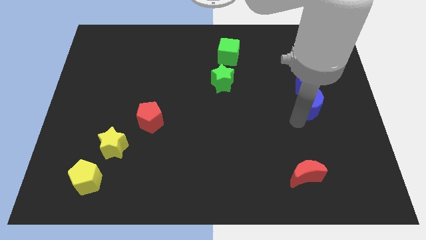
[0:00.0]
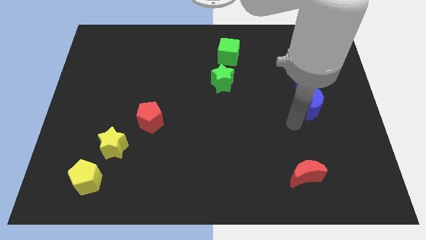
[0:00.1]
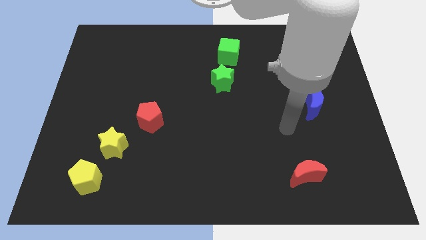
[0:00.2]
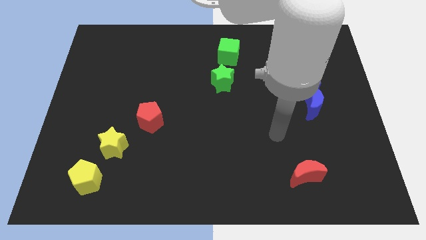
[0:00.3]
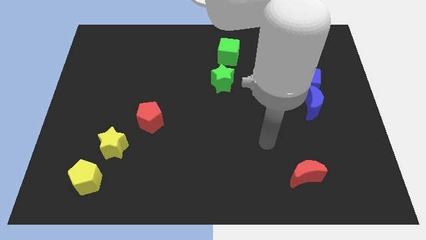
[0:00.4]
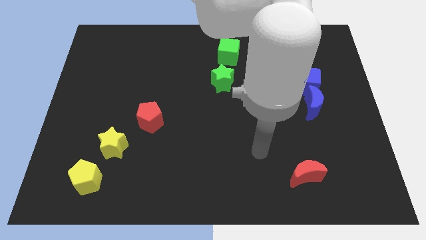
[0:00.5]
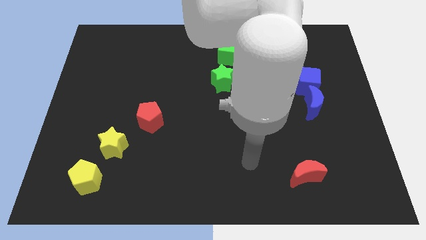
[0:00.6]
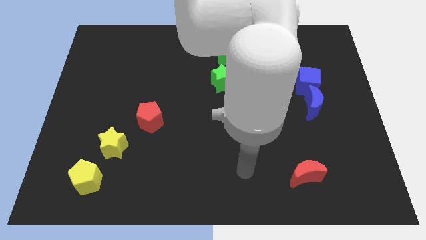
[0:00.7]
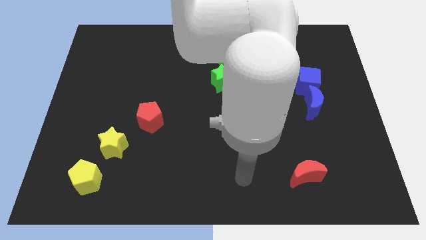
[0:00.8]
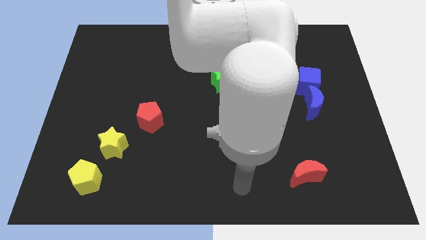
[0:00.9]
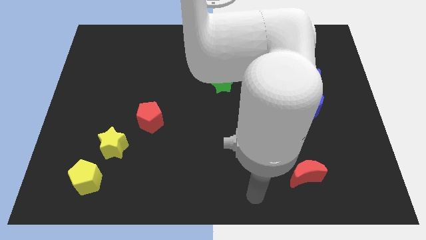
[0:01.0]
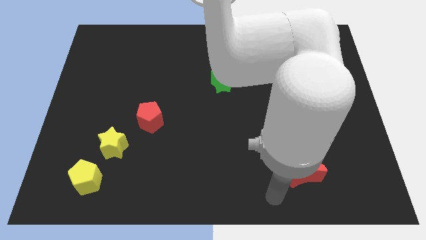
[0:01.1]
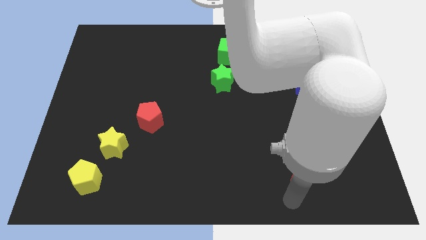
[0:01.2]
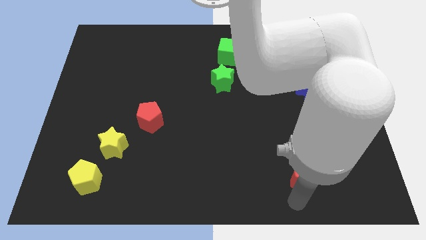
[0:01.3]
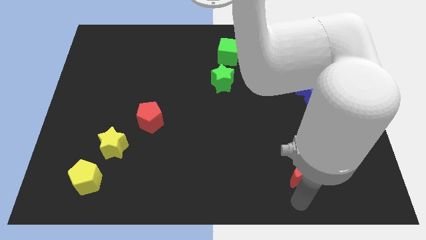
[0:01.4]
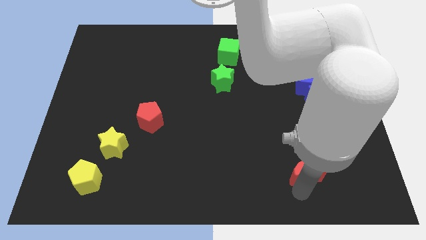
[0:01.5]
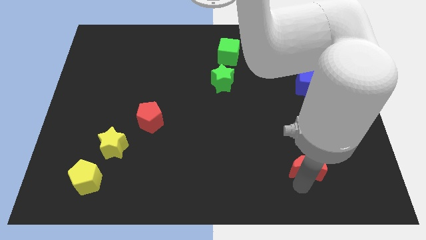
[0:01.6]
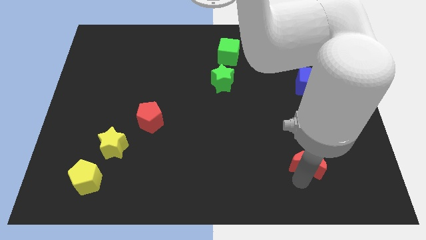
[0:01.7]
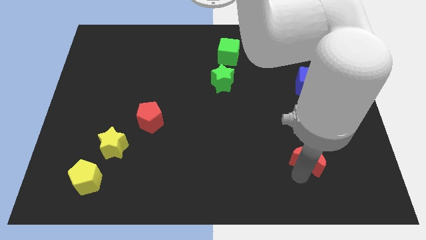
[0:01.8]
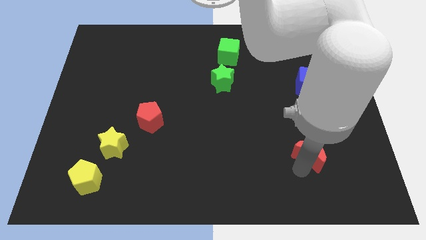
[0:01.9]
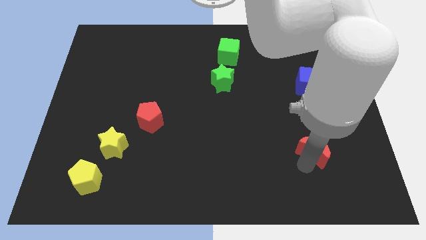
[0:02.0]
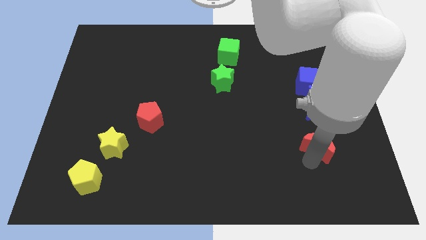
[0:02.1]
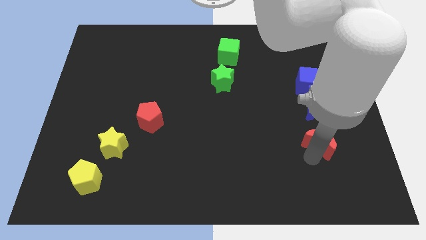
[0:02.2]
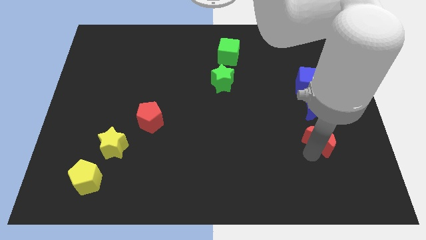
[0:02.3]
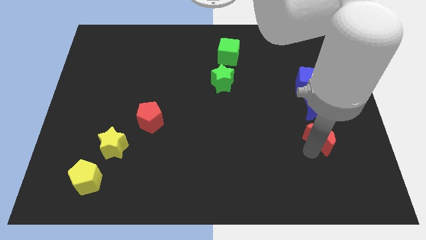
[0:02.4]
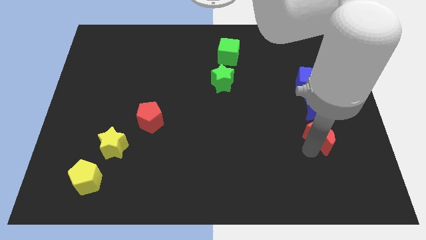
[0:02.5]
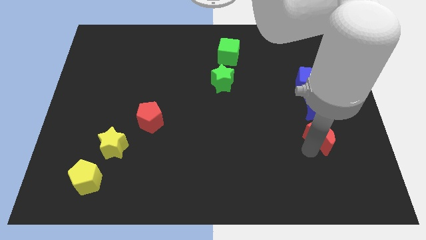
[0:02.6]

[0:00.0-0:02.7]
move red crescent towards blue moon

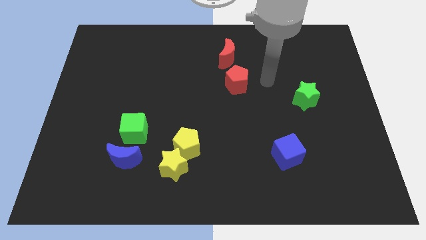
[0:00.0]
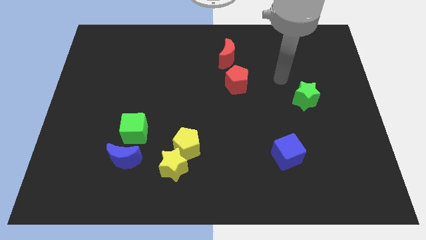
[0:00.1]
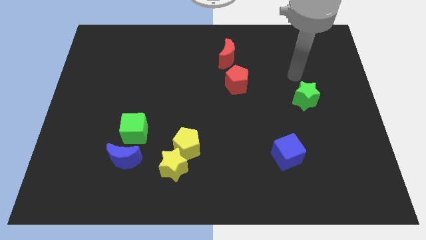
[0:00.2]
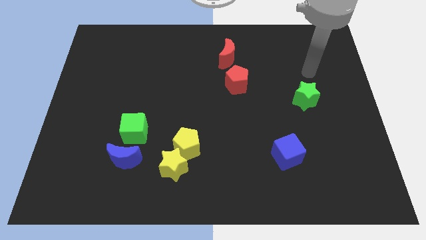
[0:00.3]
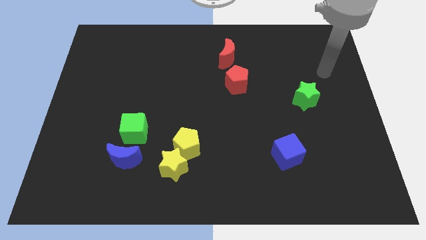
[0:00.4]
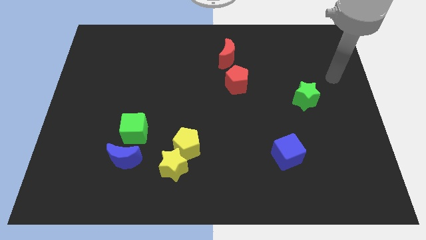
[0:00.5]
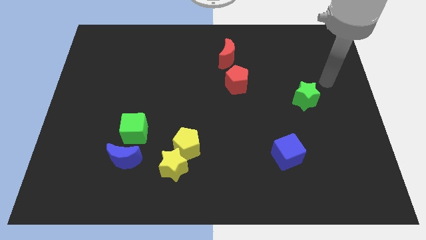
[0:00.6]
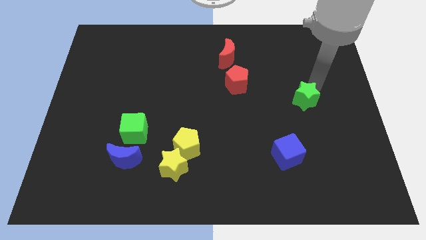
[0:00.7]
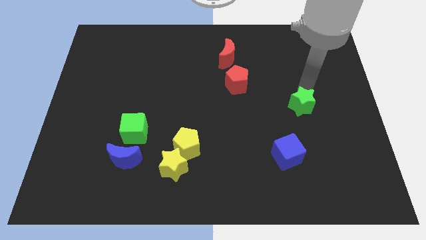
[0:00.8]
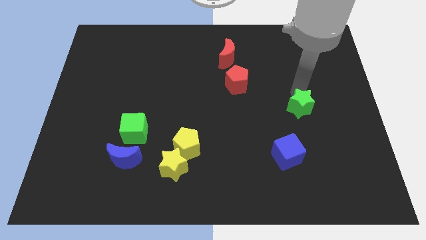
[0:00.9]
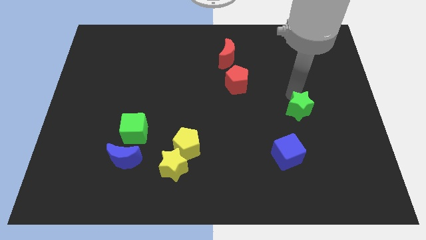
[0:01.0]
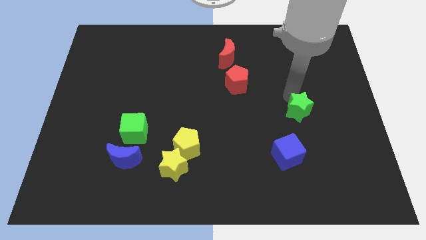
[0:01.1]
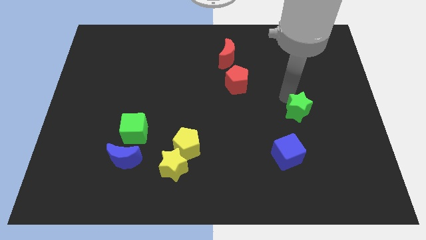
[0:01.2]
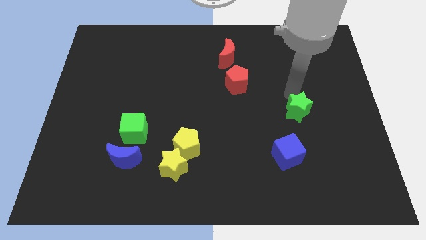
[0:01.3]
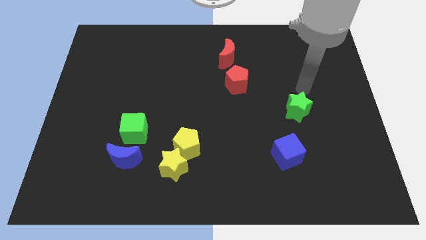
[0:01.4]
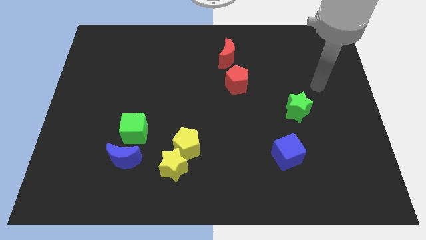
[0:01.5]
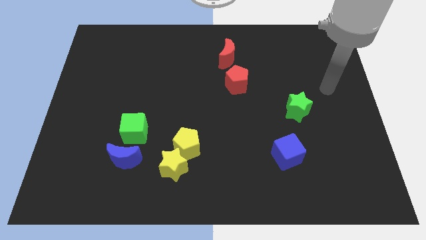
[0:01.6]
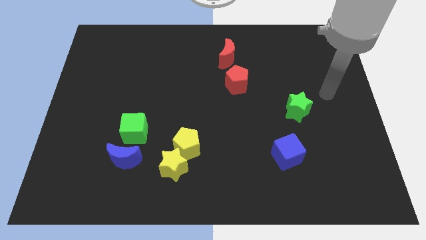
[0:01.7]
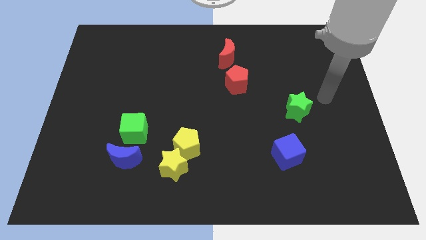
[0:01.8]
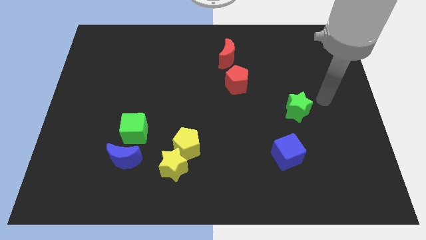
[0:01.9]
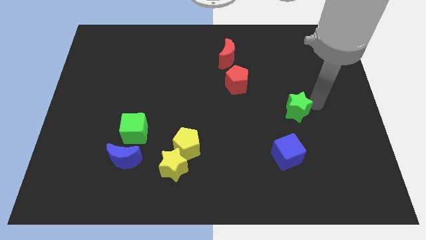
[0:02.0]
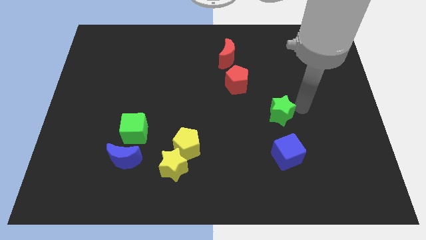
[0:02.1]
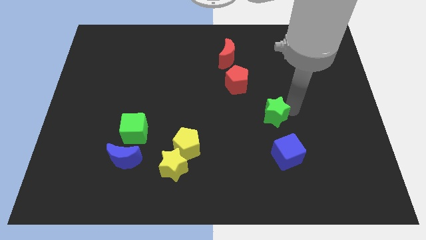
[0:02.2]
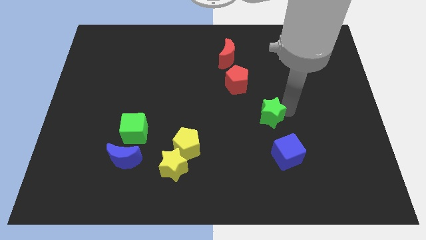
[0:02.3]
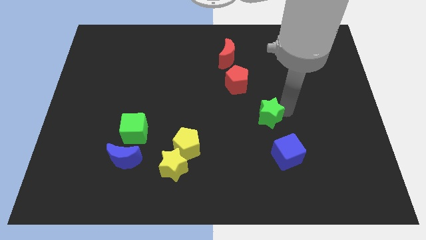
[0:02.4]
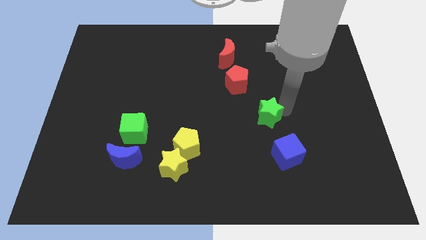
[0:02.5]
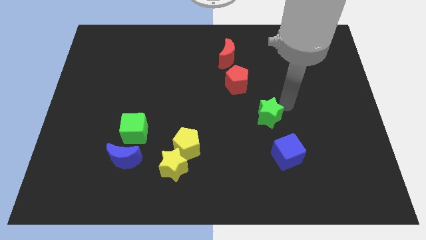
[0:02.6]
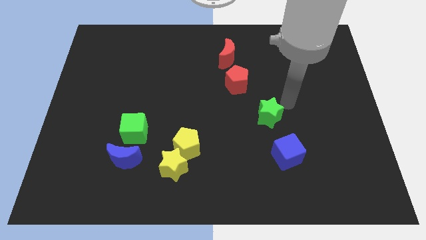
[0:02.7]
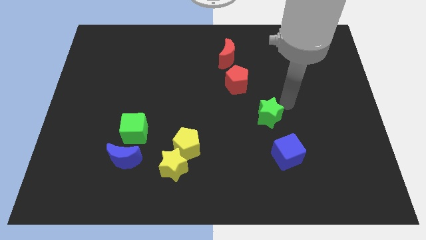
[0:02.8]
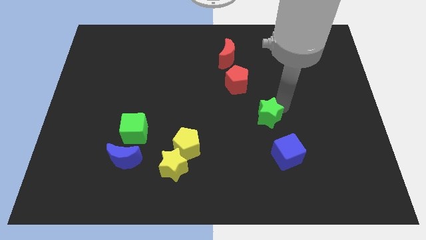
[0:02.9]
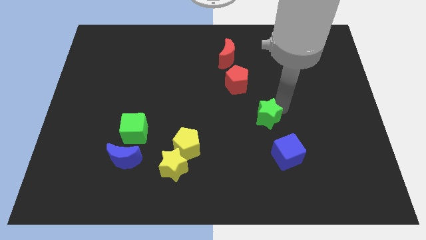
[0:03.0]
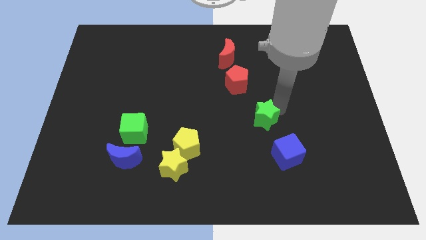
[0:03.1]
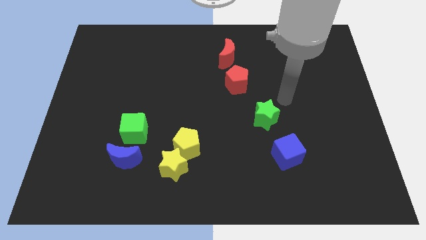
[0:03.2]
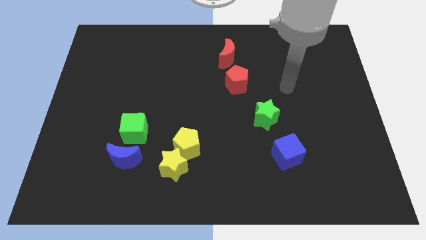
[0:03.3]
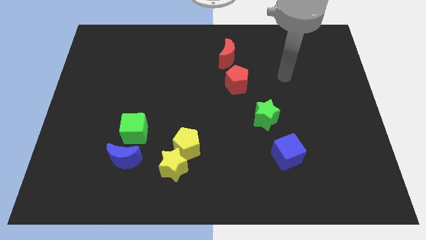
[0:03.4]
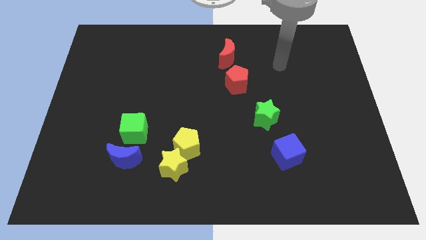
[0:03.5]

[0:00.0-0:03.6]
place the green star in between the red pentagon and the blue cube

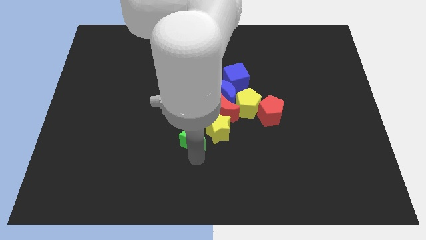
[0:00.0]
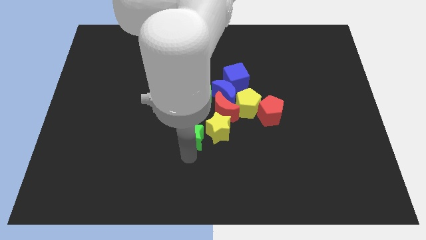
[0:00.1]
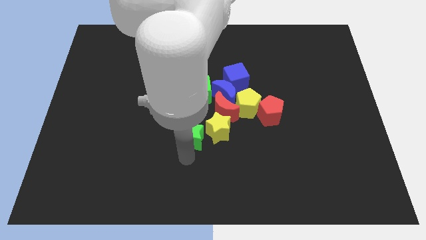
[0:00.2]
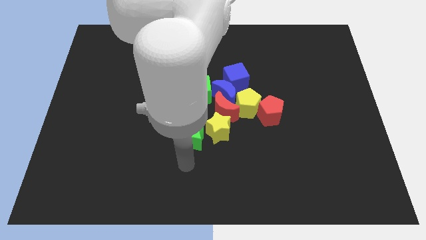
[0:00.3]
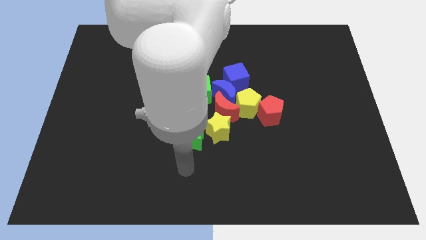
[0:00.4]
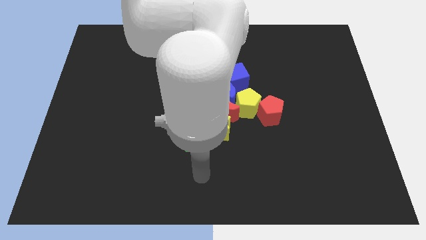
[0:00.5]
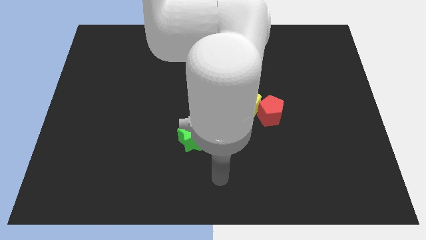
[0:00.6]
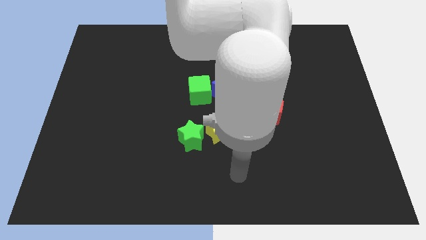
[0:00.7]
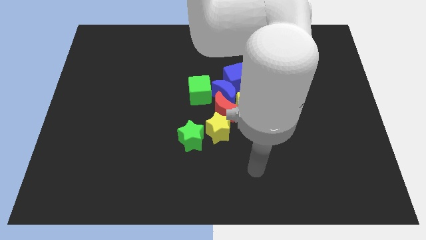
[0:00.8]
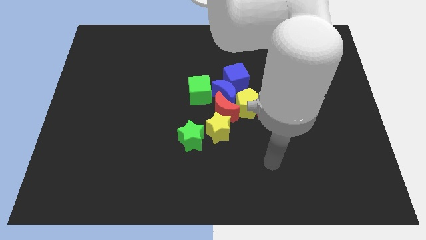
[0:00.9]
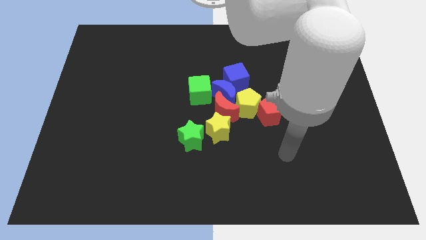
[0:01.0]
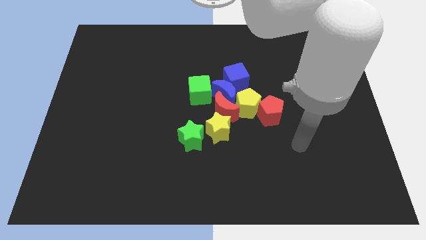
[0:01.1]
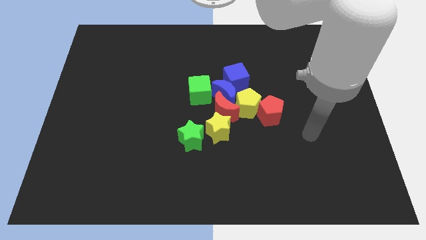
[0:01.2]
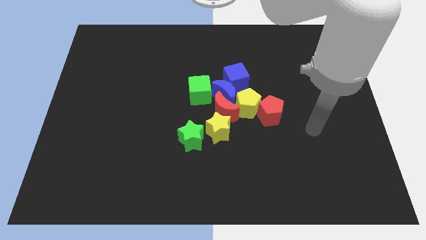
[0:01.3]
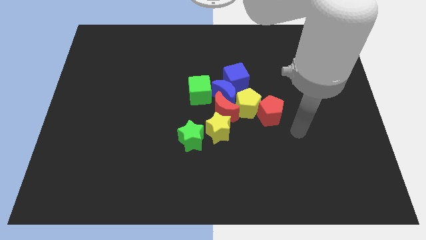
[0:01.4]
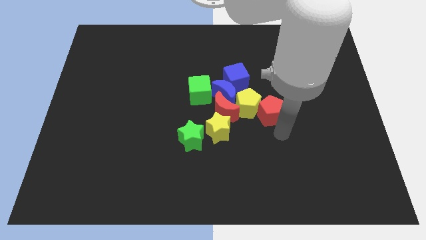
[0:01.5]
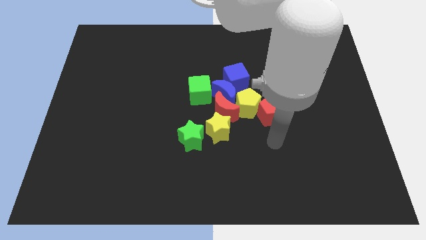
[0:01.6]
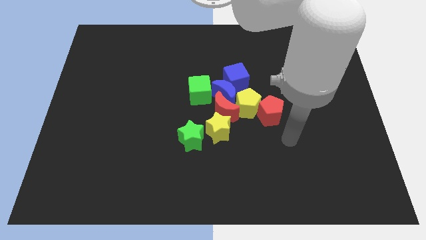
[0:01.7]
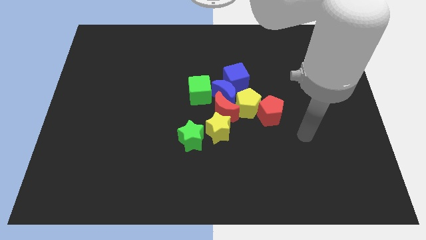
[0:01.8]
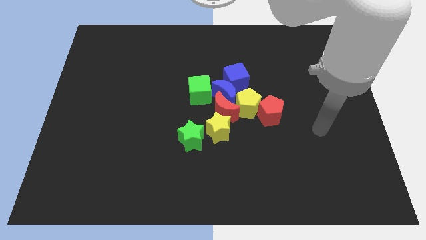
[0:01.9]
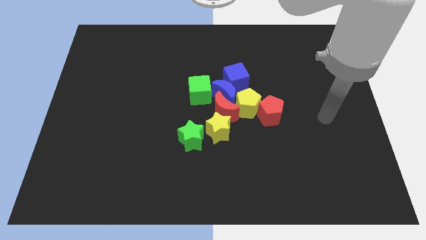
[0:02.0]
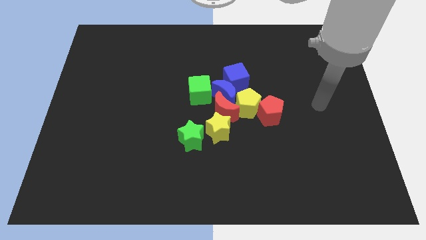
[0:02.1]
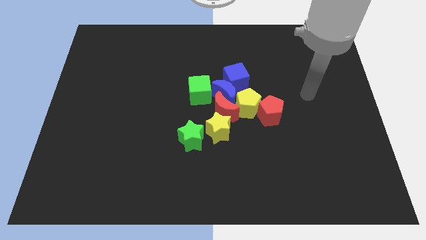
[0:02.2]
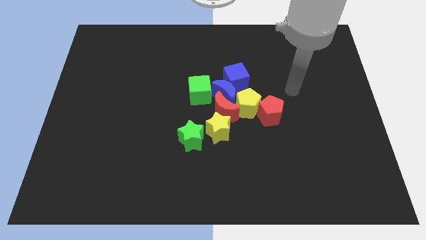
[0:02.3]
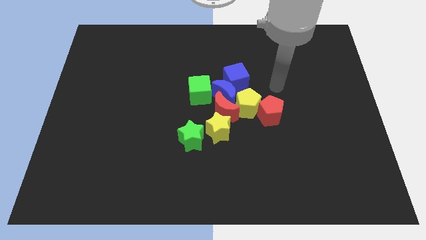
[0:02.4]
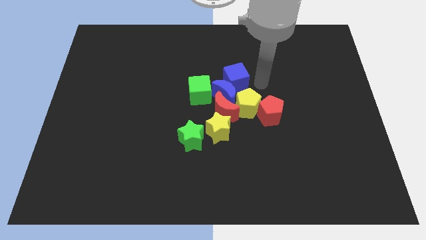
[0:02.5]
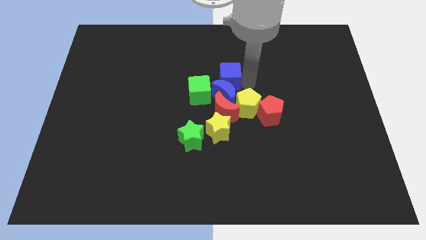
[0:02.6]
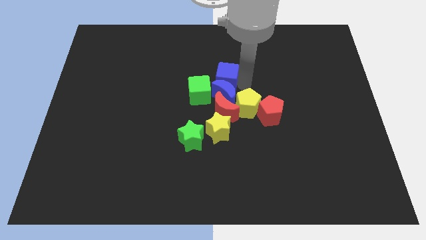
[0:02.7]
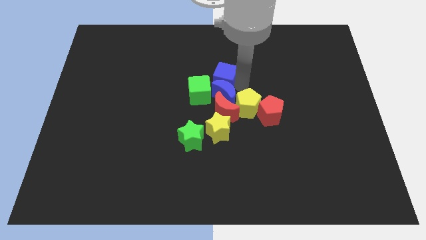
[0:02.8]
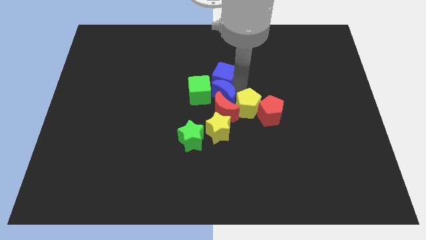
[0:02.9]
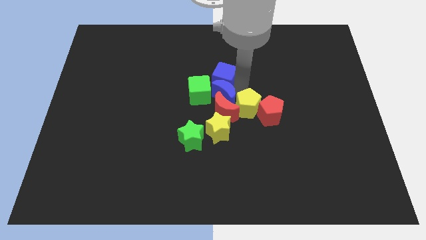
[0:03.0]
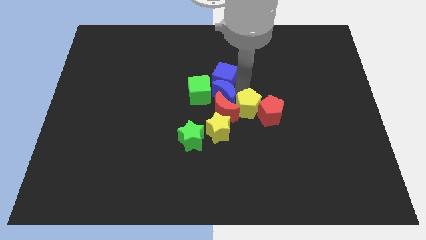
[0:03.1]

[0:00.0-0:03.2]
slightly push blue cube into green cube
